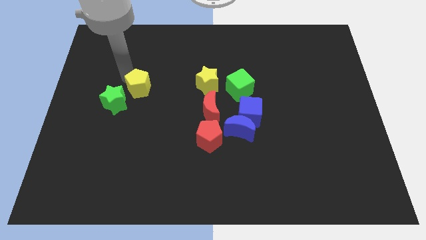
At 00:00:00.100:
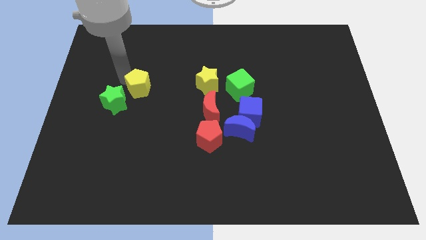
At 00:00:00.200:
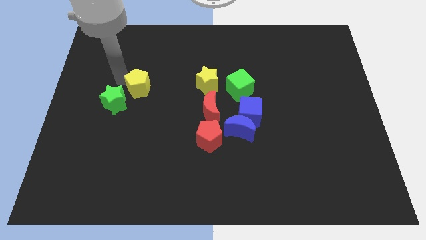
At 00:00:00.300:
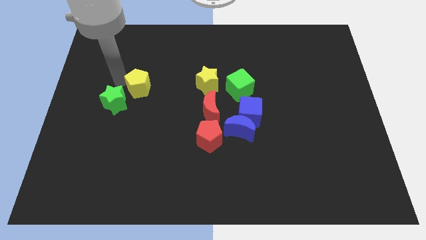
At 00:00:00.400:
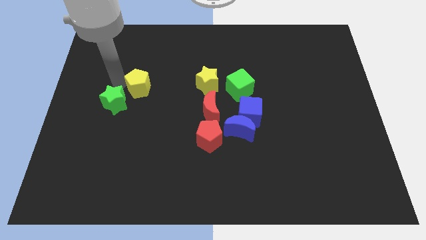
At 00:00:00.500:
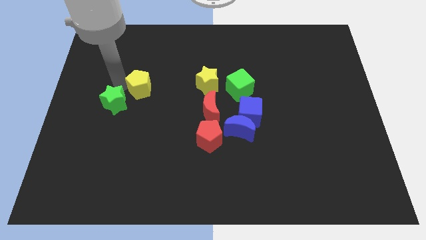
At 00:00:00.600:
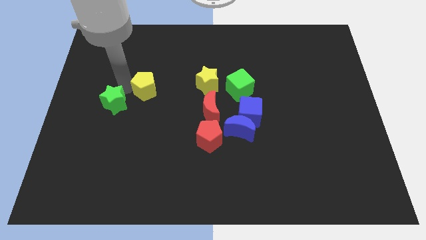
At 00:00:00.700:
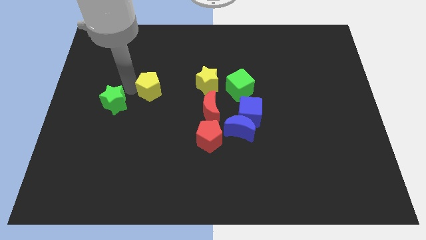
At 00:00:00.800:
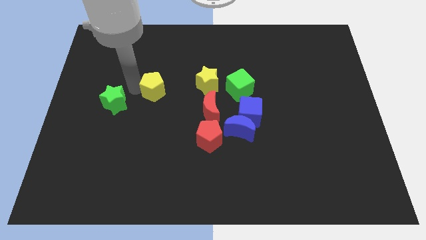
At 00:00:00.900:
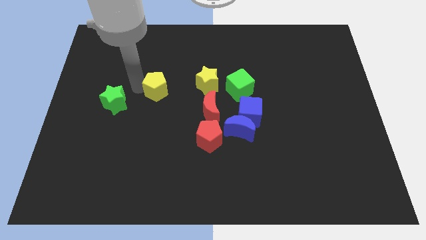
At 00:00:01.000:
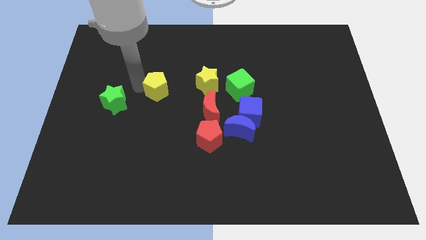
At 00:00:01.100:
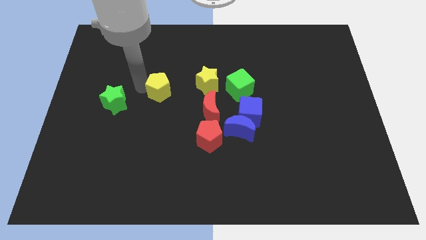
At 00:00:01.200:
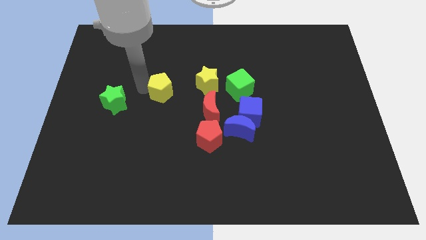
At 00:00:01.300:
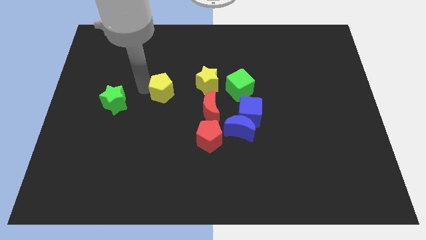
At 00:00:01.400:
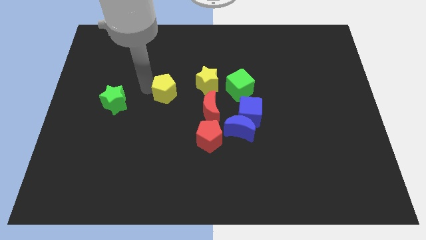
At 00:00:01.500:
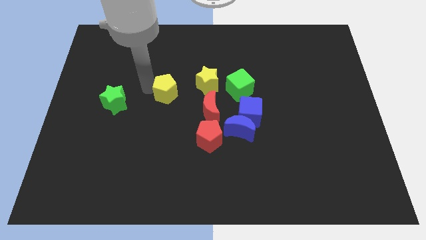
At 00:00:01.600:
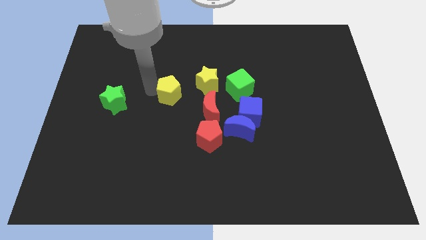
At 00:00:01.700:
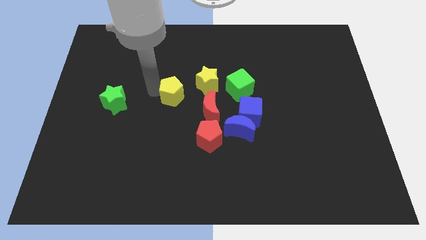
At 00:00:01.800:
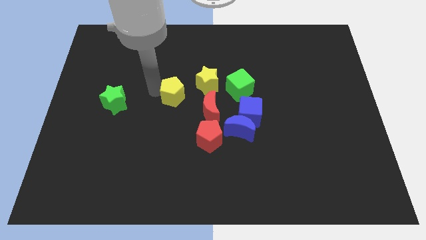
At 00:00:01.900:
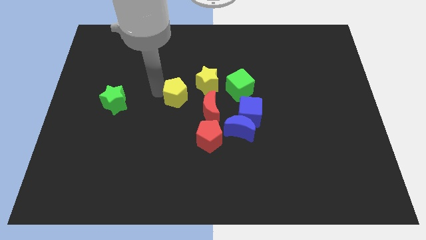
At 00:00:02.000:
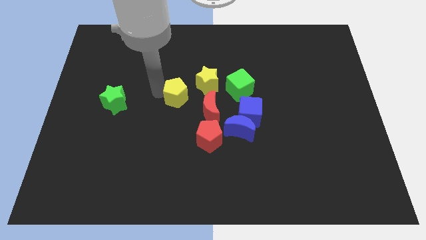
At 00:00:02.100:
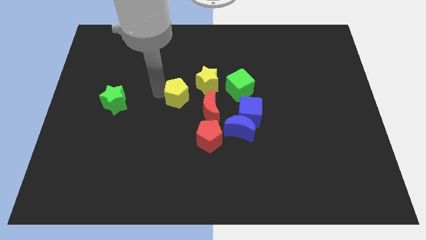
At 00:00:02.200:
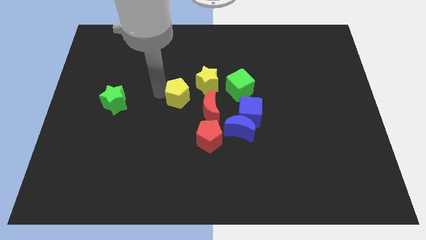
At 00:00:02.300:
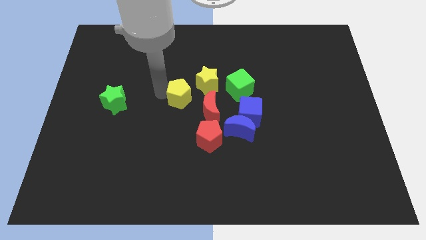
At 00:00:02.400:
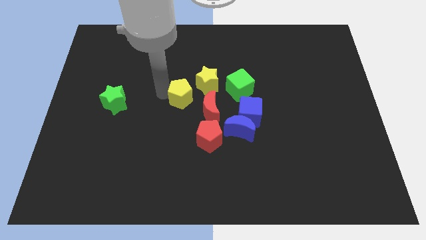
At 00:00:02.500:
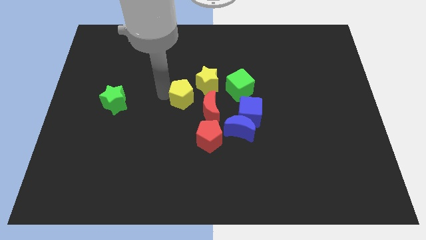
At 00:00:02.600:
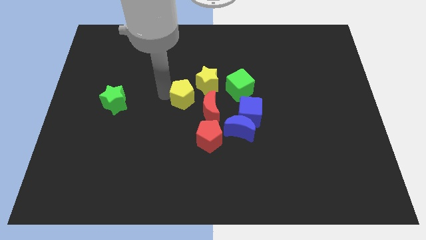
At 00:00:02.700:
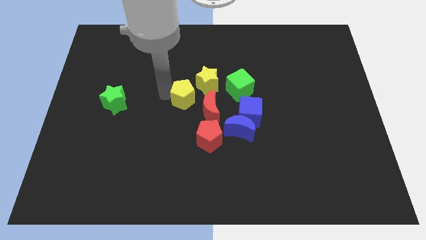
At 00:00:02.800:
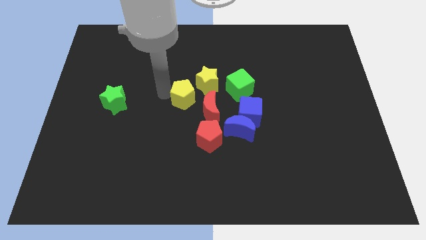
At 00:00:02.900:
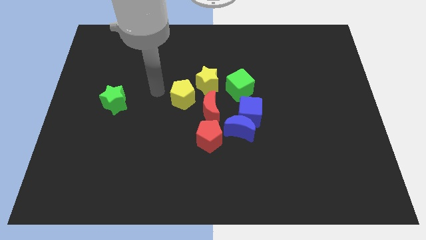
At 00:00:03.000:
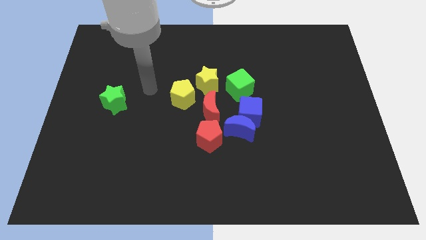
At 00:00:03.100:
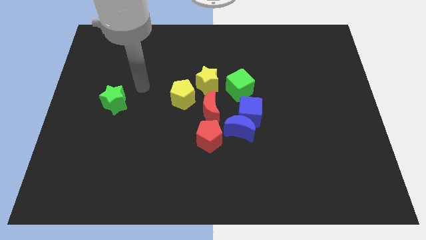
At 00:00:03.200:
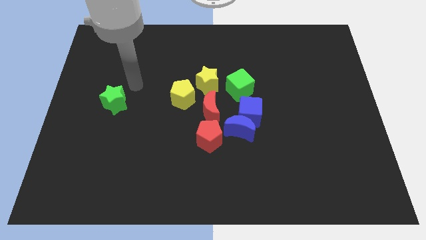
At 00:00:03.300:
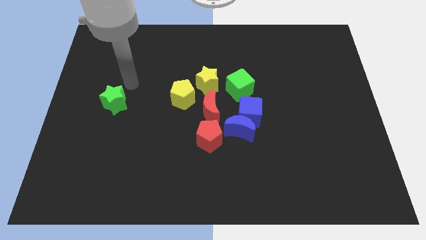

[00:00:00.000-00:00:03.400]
place yellow pentagon diagonal to the yellow star

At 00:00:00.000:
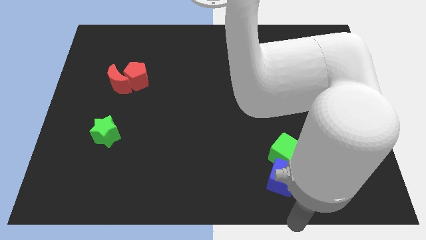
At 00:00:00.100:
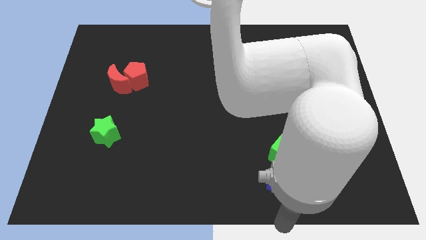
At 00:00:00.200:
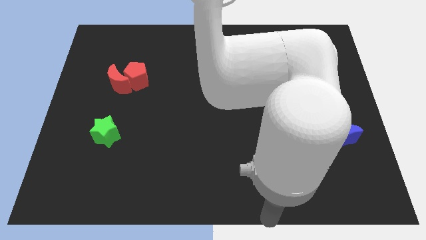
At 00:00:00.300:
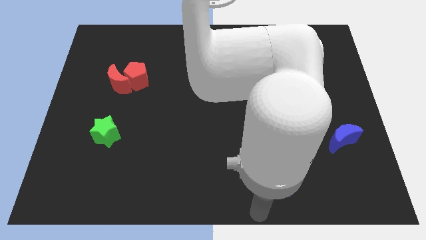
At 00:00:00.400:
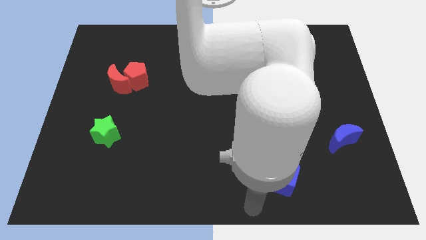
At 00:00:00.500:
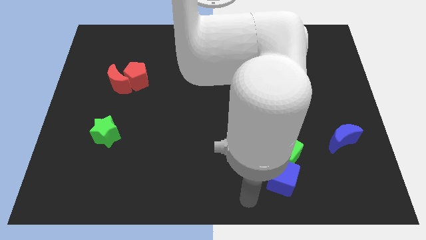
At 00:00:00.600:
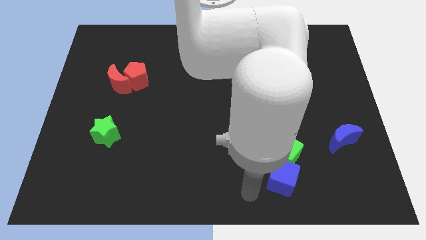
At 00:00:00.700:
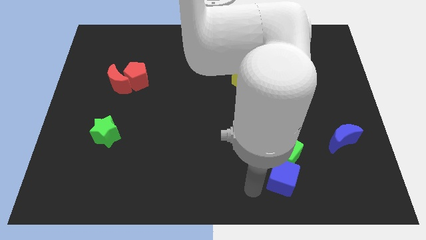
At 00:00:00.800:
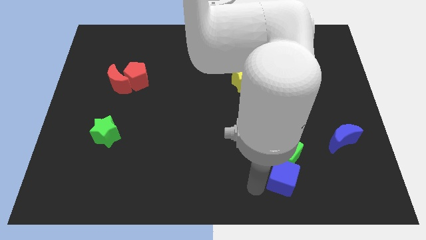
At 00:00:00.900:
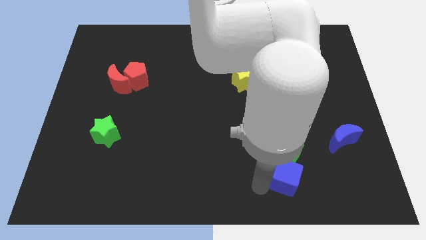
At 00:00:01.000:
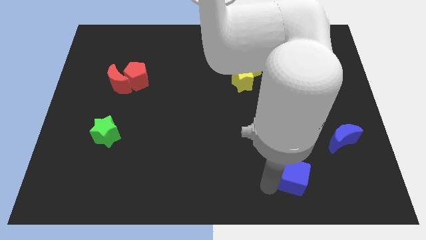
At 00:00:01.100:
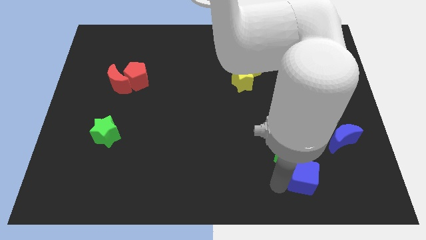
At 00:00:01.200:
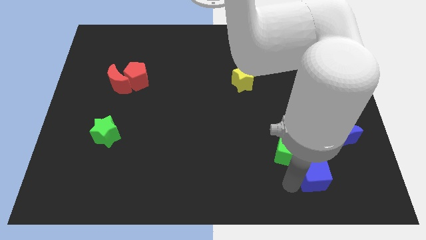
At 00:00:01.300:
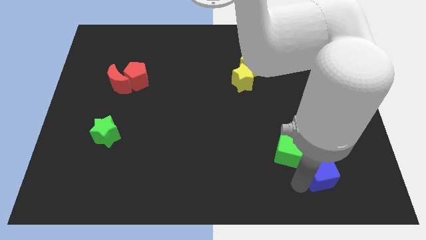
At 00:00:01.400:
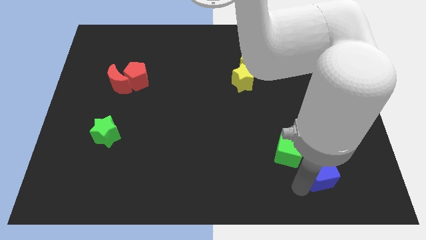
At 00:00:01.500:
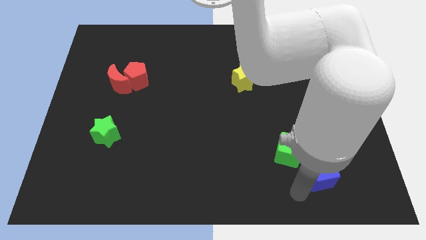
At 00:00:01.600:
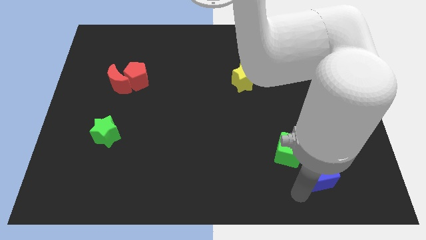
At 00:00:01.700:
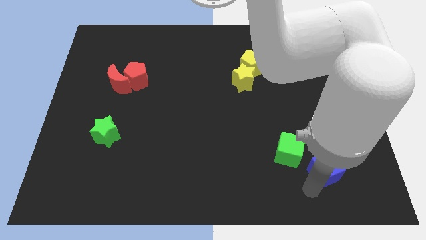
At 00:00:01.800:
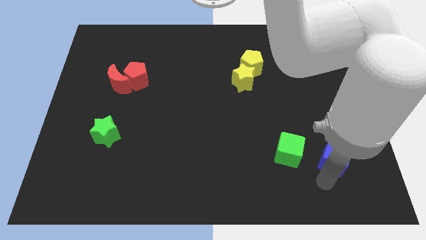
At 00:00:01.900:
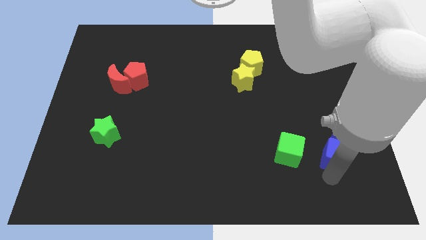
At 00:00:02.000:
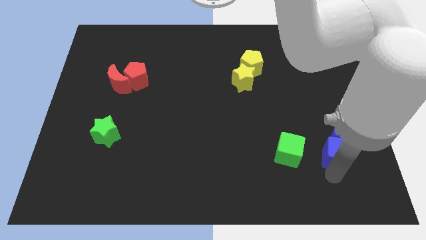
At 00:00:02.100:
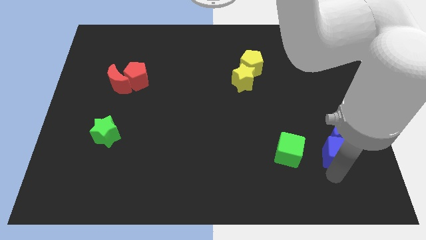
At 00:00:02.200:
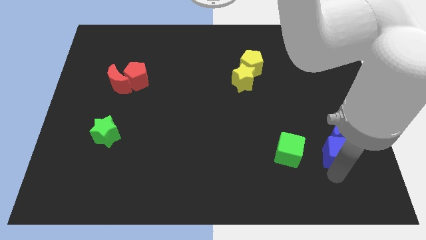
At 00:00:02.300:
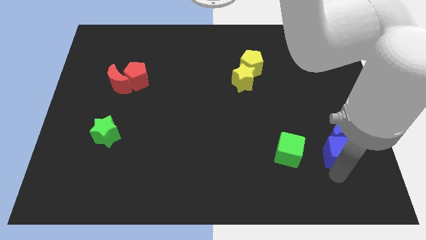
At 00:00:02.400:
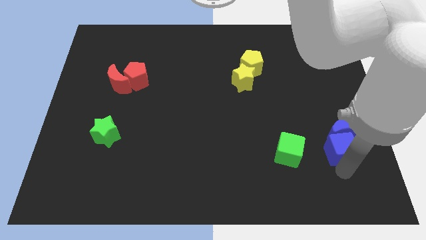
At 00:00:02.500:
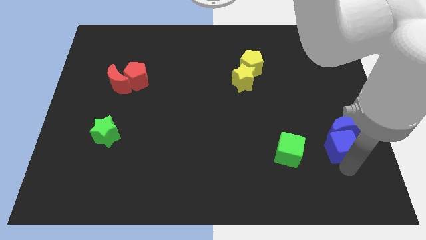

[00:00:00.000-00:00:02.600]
push the blue crescent bottom of the blue cube

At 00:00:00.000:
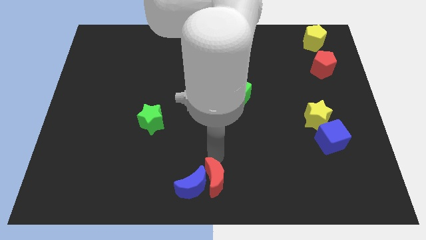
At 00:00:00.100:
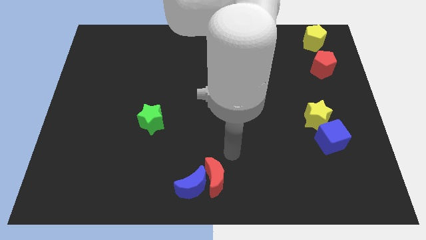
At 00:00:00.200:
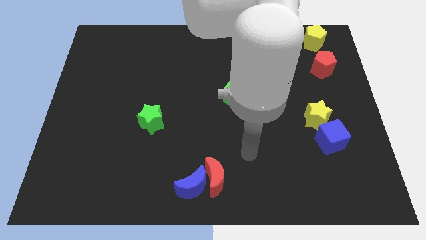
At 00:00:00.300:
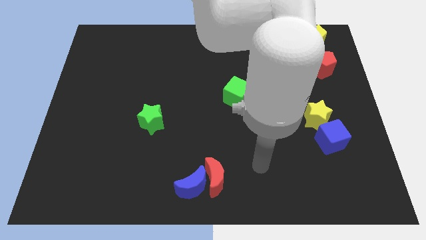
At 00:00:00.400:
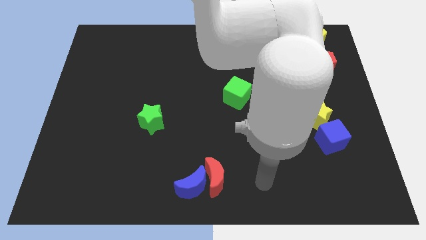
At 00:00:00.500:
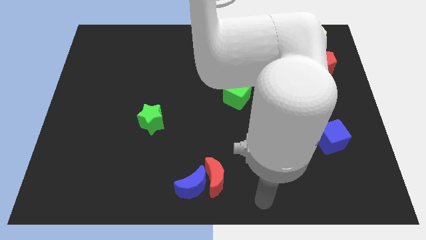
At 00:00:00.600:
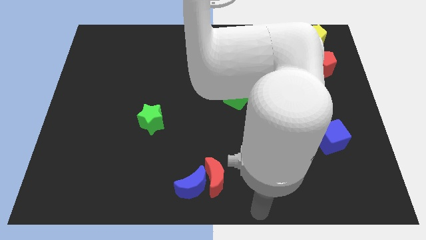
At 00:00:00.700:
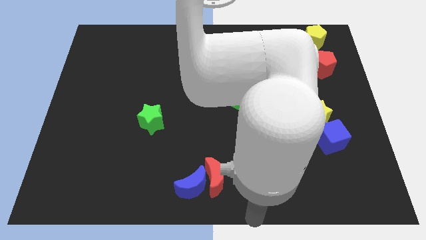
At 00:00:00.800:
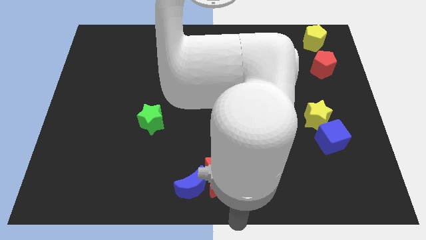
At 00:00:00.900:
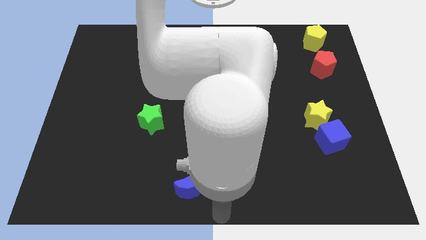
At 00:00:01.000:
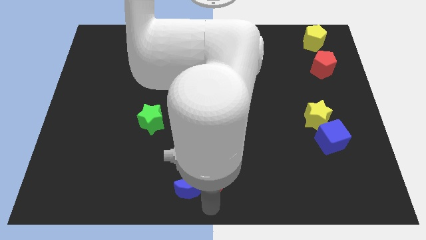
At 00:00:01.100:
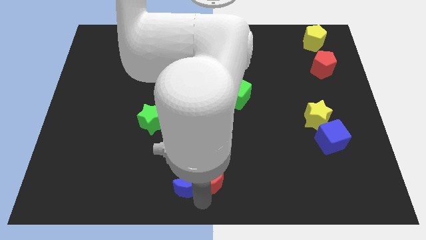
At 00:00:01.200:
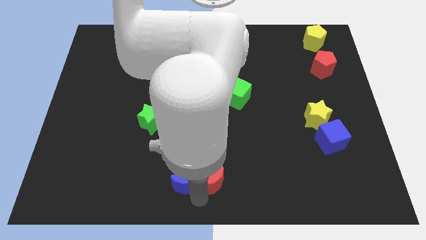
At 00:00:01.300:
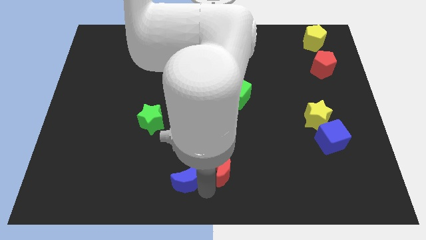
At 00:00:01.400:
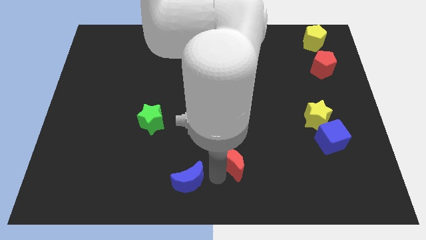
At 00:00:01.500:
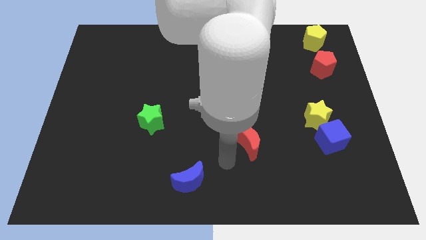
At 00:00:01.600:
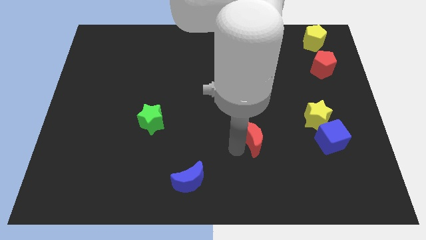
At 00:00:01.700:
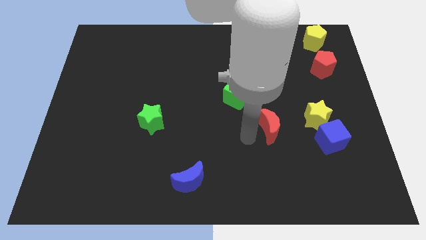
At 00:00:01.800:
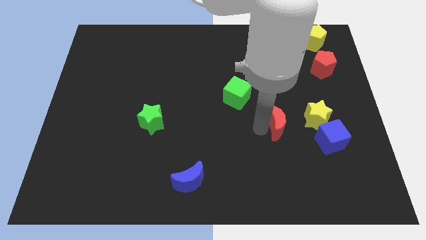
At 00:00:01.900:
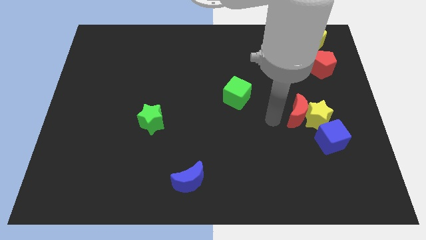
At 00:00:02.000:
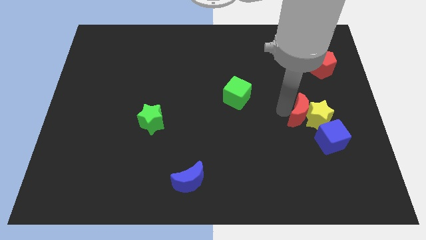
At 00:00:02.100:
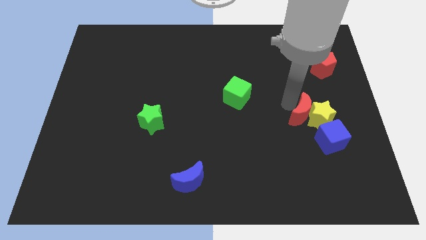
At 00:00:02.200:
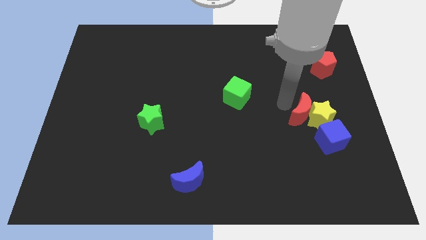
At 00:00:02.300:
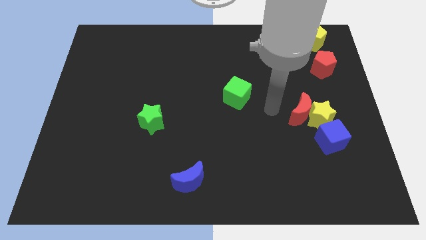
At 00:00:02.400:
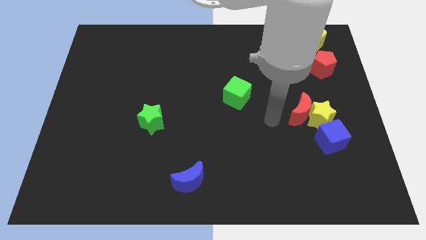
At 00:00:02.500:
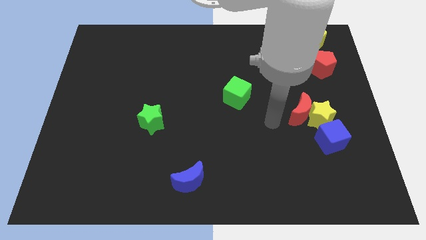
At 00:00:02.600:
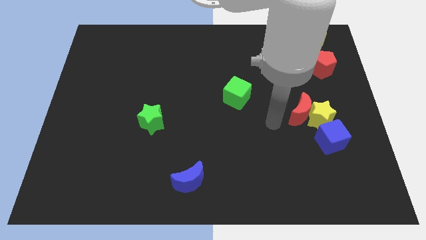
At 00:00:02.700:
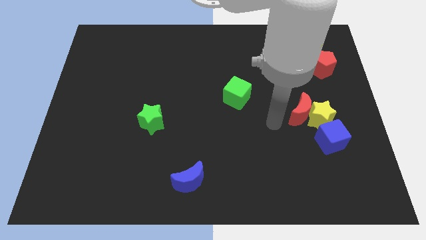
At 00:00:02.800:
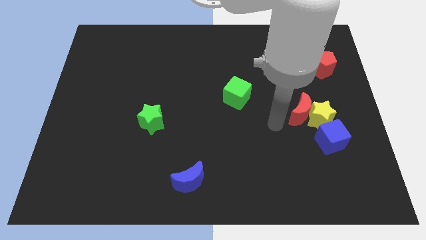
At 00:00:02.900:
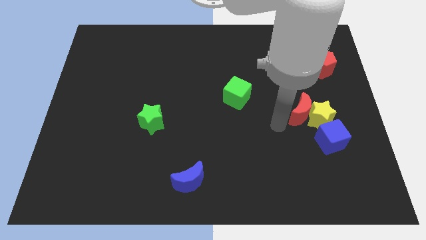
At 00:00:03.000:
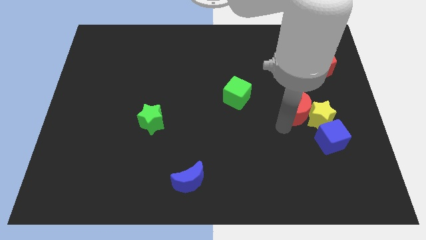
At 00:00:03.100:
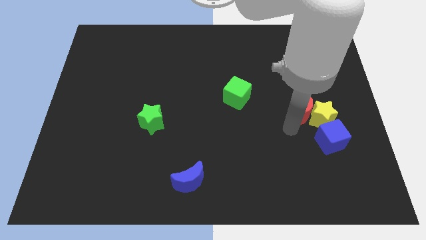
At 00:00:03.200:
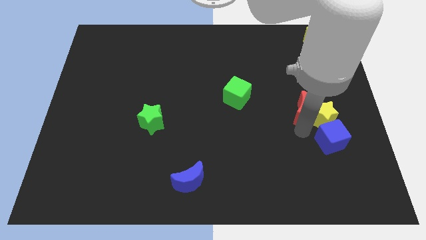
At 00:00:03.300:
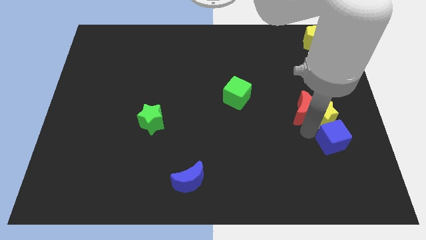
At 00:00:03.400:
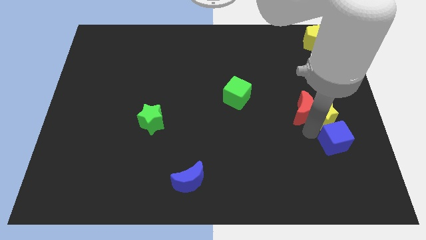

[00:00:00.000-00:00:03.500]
push the red crescent towards yellow star
